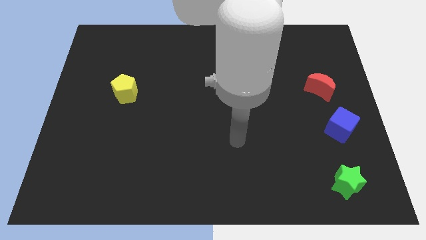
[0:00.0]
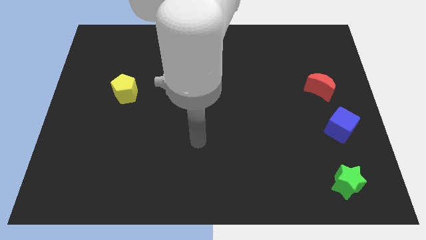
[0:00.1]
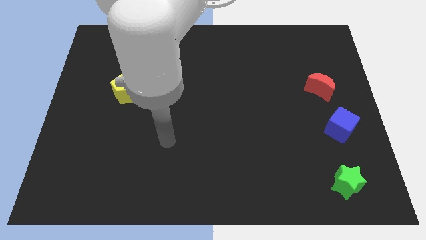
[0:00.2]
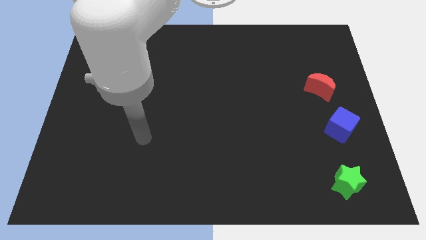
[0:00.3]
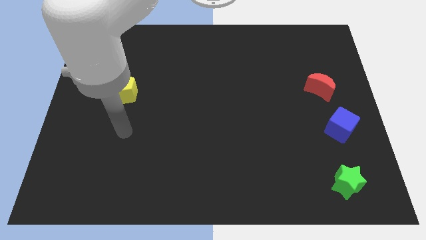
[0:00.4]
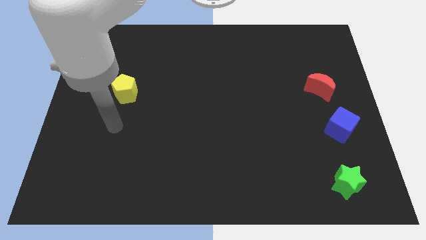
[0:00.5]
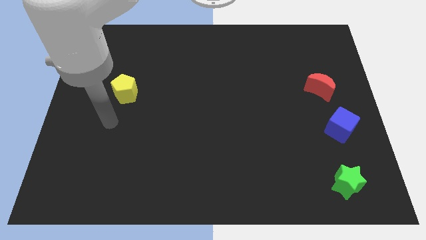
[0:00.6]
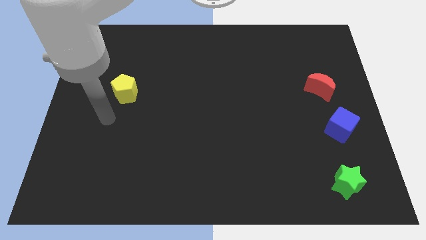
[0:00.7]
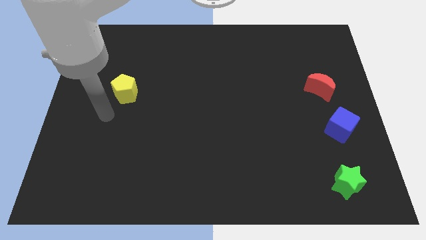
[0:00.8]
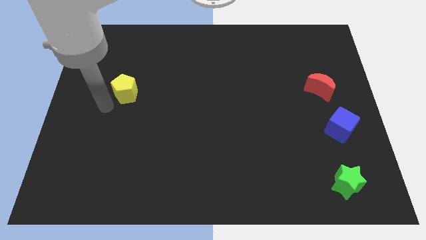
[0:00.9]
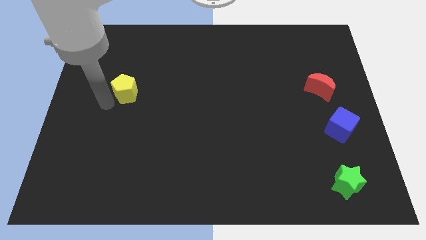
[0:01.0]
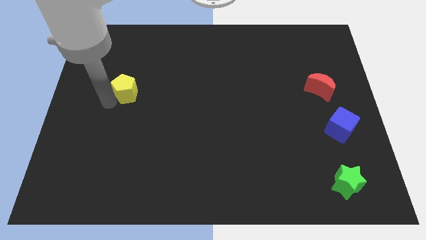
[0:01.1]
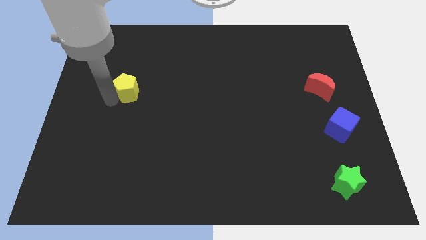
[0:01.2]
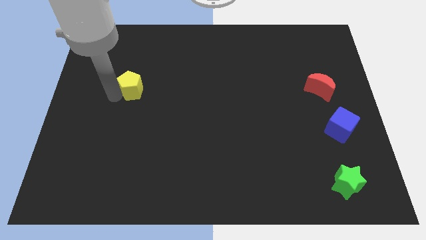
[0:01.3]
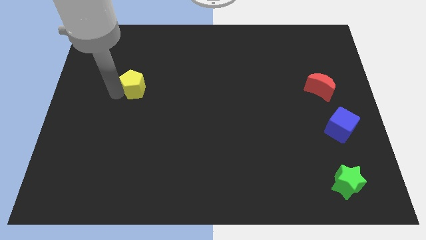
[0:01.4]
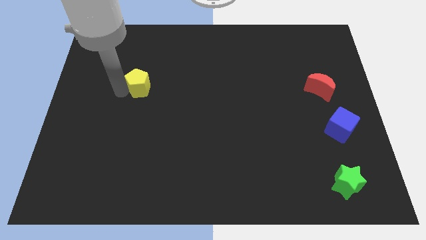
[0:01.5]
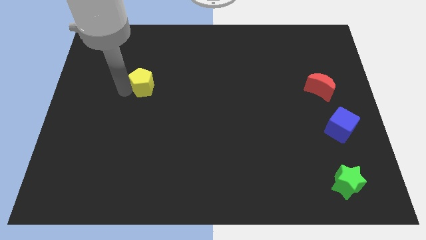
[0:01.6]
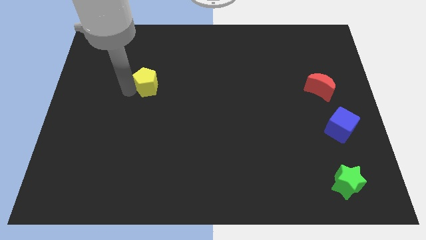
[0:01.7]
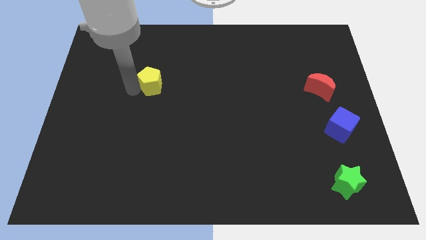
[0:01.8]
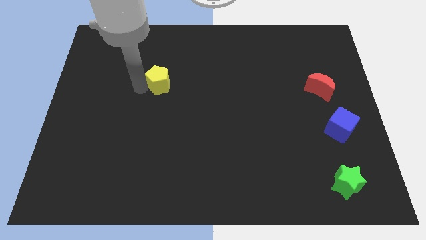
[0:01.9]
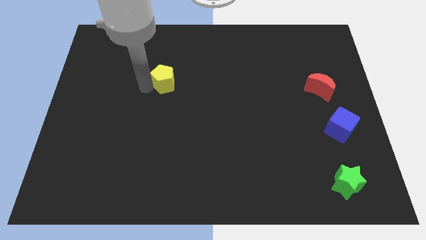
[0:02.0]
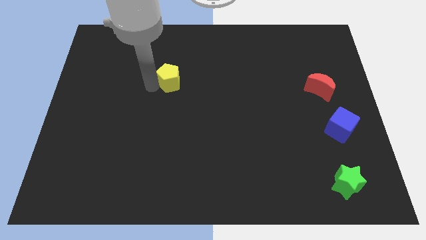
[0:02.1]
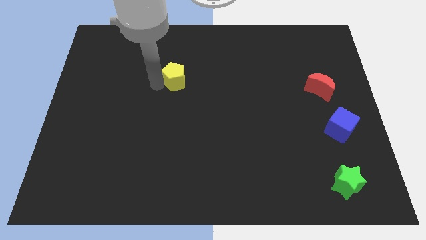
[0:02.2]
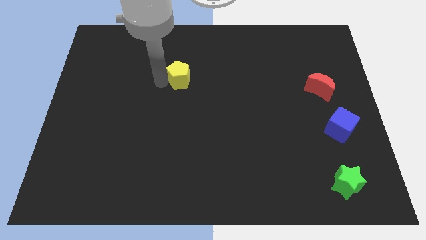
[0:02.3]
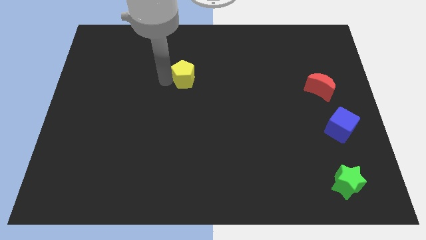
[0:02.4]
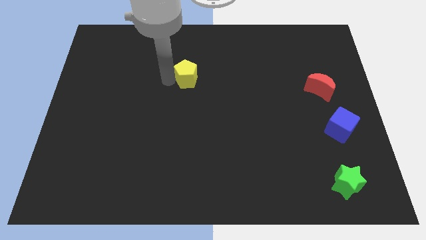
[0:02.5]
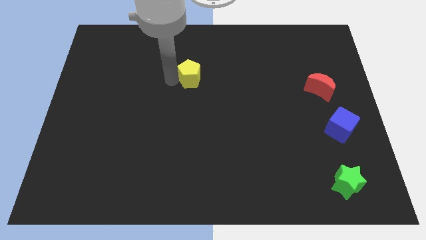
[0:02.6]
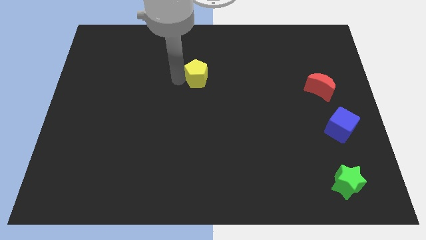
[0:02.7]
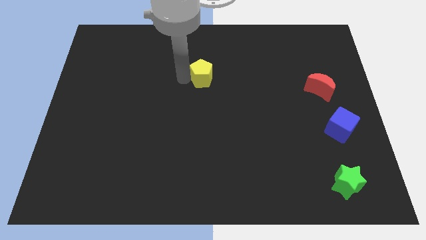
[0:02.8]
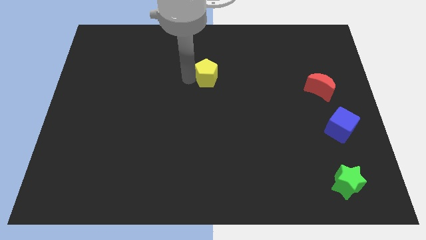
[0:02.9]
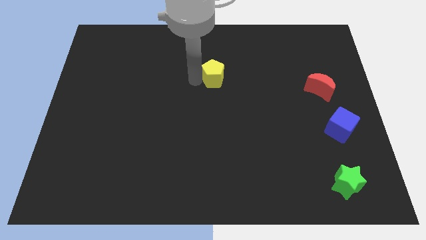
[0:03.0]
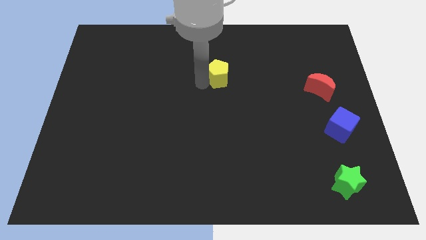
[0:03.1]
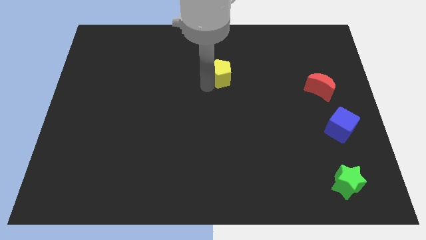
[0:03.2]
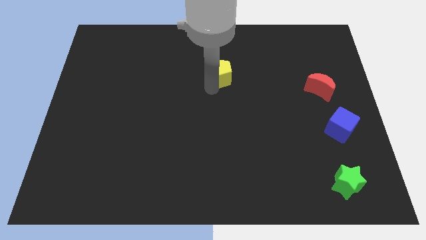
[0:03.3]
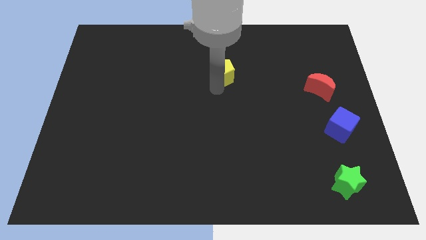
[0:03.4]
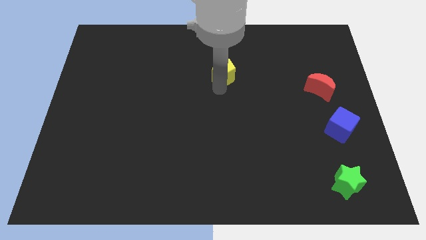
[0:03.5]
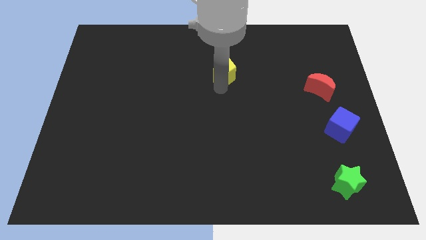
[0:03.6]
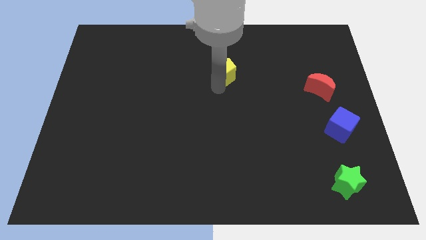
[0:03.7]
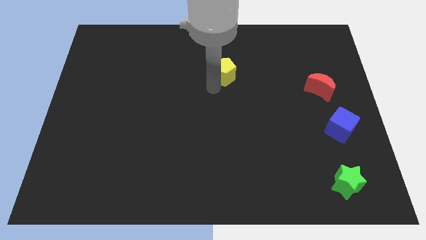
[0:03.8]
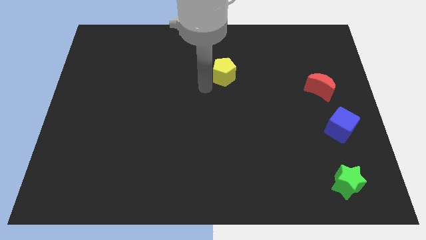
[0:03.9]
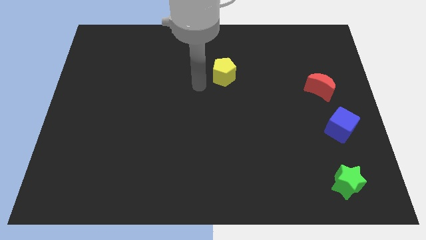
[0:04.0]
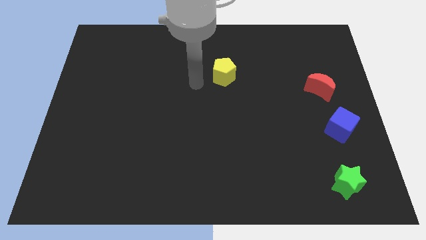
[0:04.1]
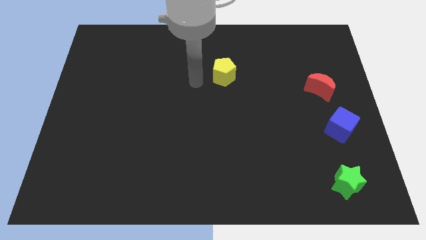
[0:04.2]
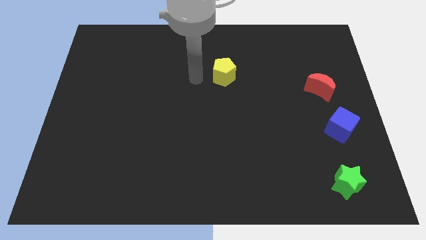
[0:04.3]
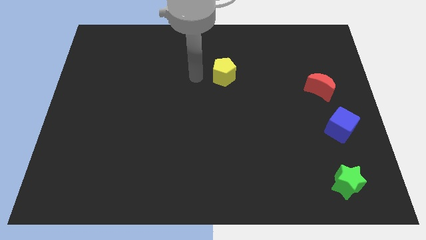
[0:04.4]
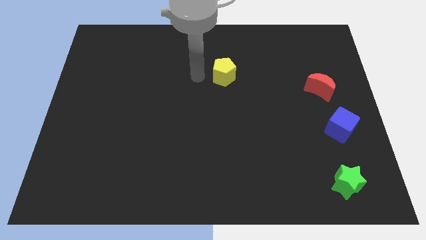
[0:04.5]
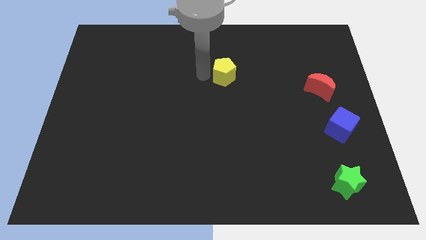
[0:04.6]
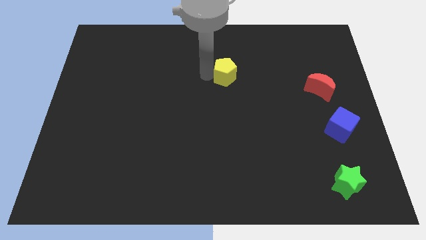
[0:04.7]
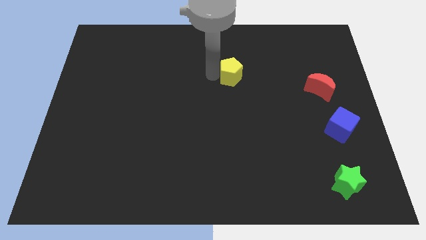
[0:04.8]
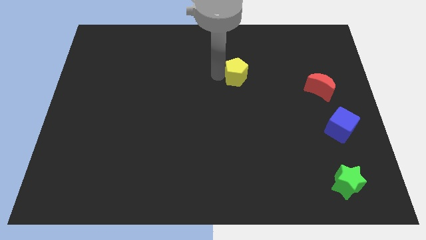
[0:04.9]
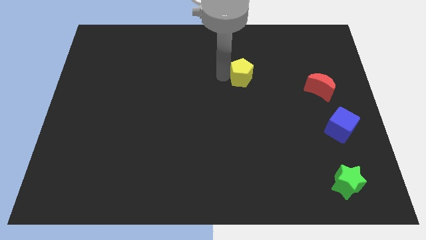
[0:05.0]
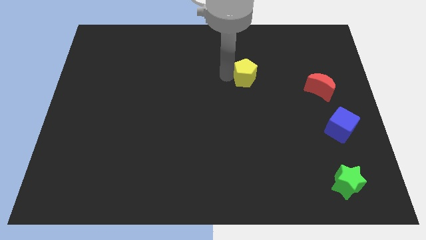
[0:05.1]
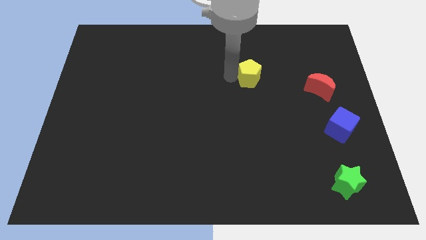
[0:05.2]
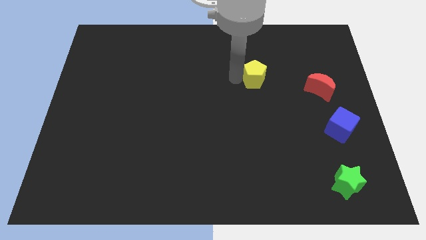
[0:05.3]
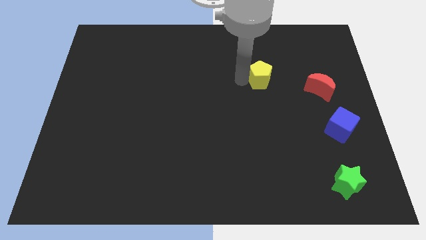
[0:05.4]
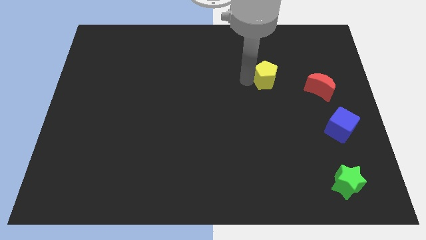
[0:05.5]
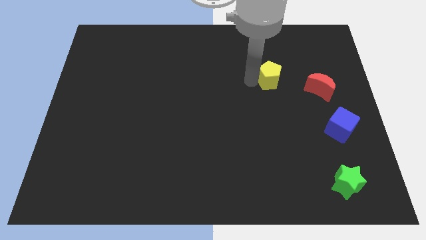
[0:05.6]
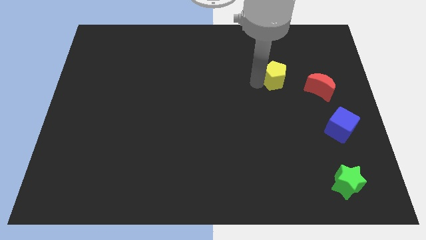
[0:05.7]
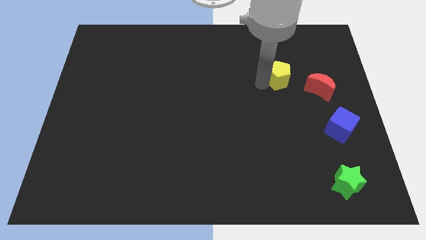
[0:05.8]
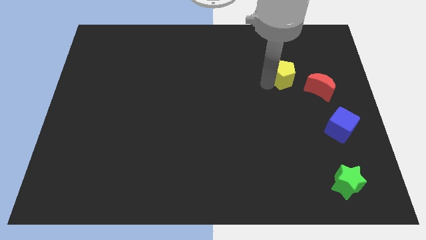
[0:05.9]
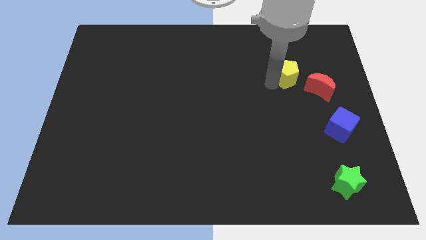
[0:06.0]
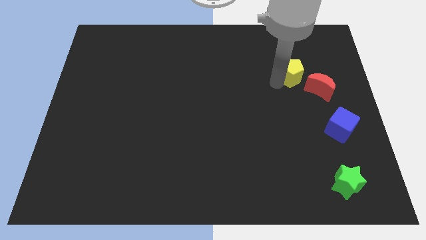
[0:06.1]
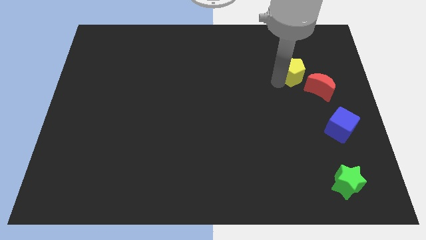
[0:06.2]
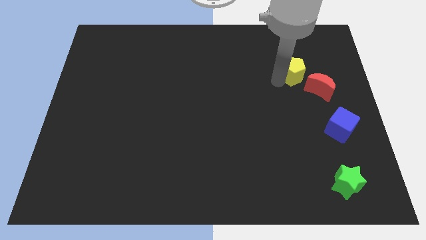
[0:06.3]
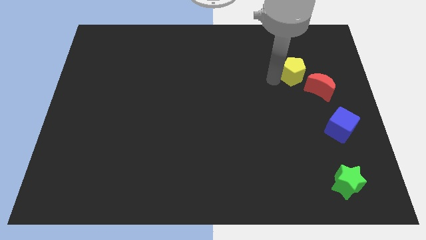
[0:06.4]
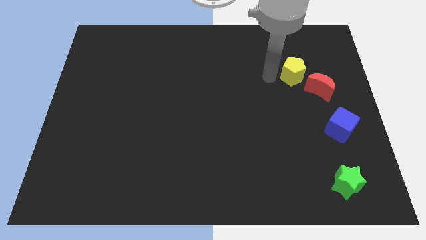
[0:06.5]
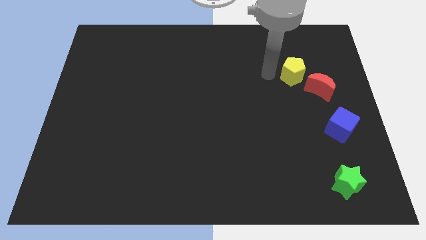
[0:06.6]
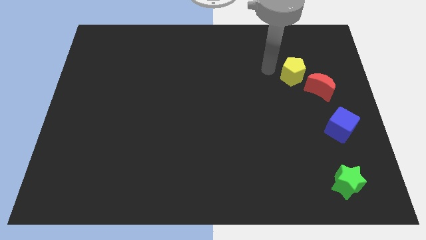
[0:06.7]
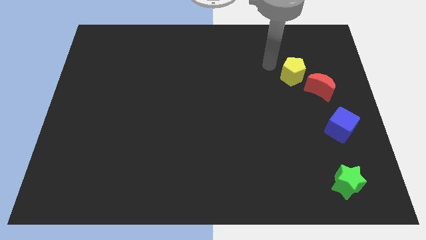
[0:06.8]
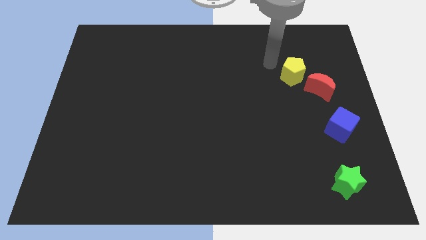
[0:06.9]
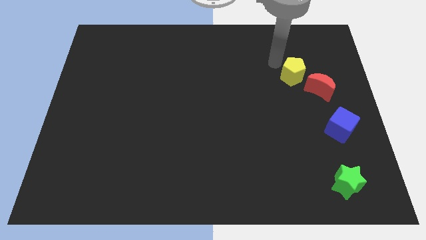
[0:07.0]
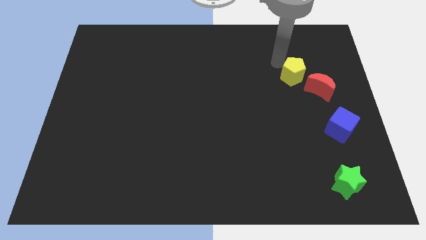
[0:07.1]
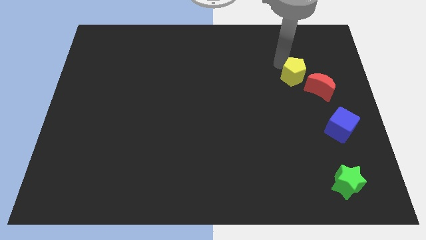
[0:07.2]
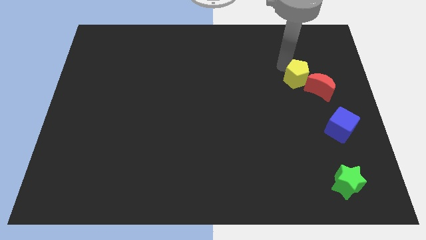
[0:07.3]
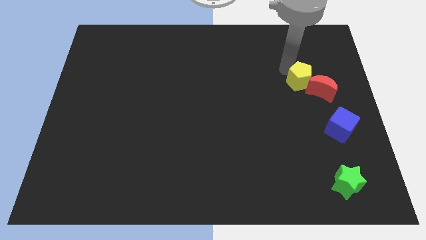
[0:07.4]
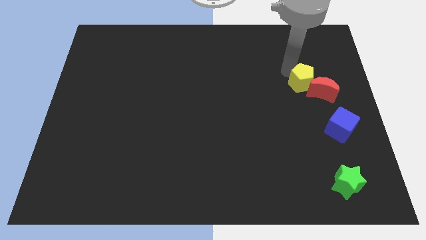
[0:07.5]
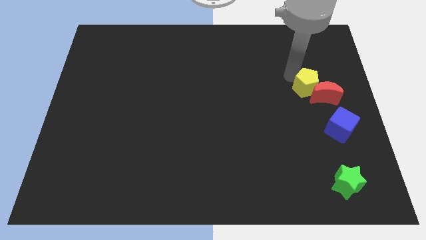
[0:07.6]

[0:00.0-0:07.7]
slide the yellow pentagon towards the moon

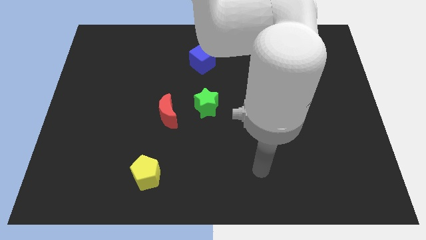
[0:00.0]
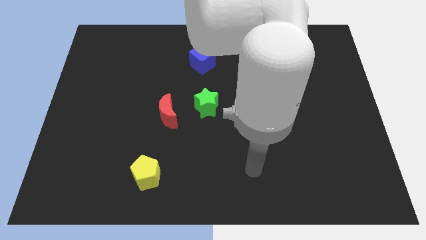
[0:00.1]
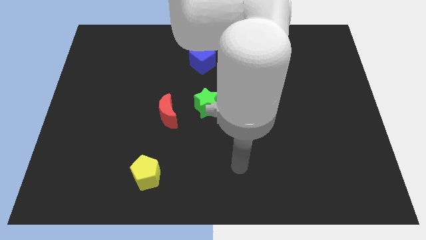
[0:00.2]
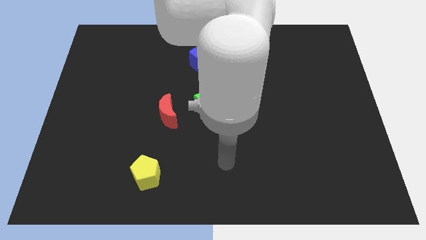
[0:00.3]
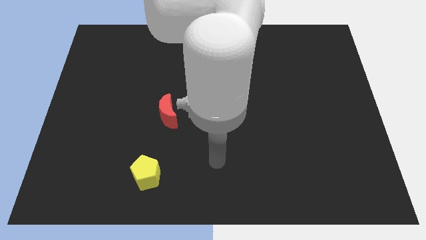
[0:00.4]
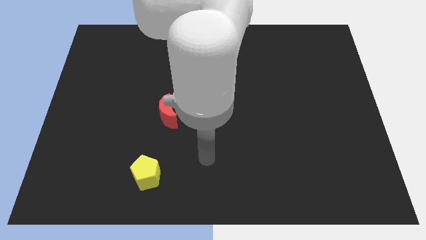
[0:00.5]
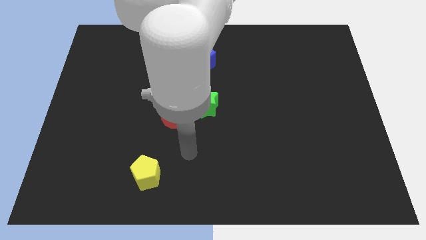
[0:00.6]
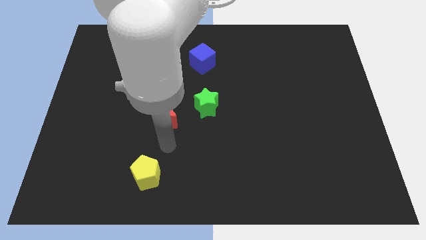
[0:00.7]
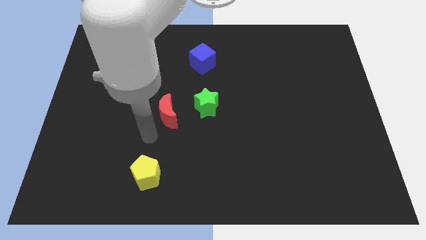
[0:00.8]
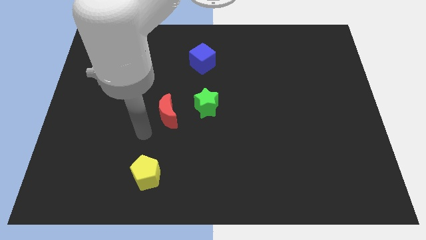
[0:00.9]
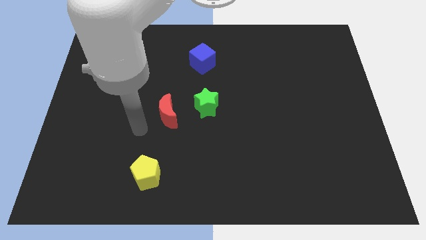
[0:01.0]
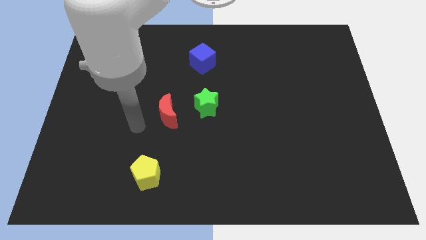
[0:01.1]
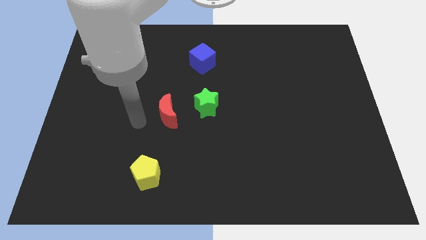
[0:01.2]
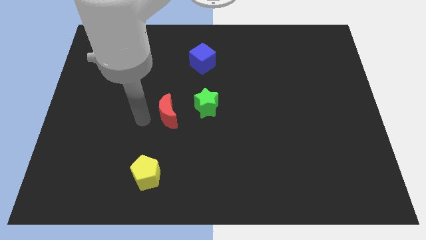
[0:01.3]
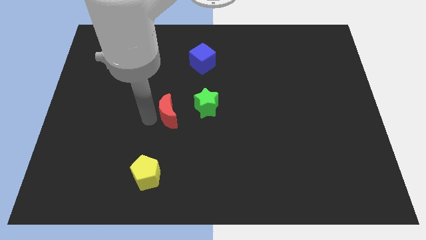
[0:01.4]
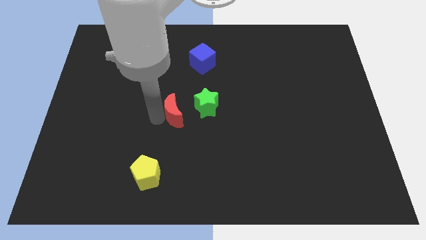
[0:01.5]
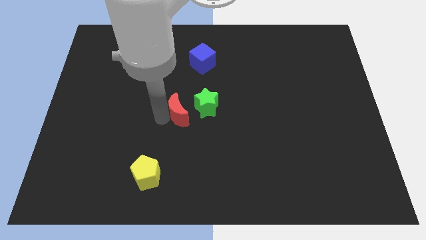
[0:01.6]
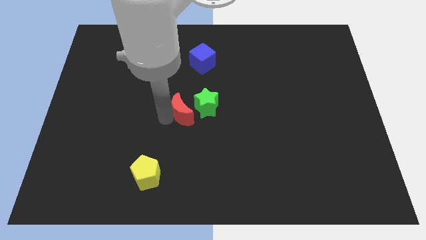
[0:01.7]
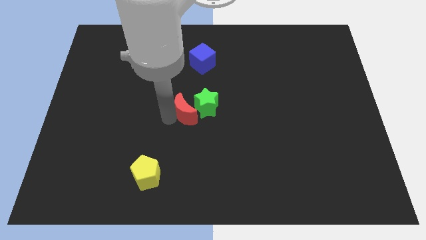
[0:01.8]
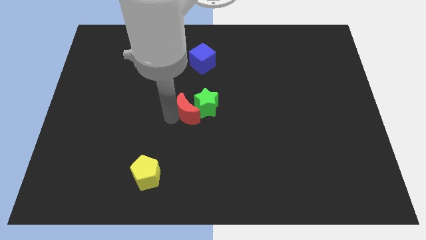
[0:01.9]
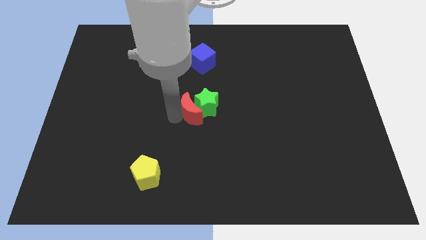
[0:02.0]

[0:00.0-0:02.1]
slide the red moon towards the star
